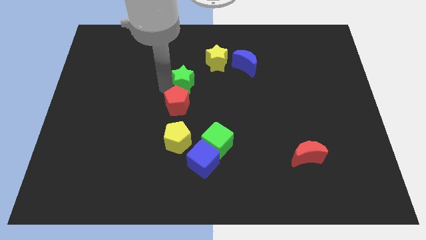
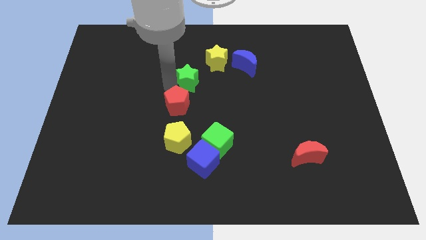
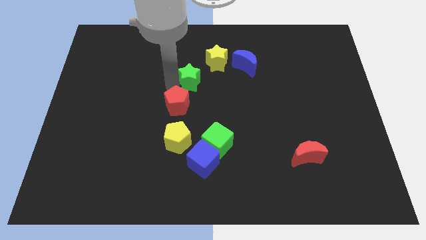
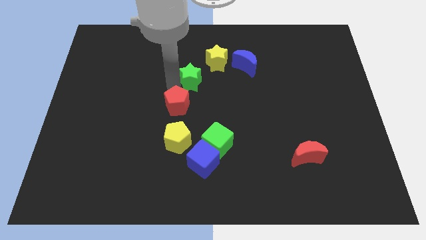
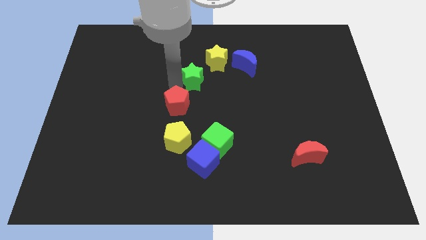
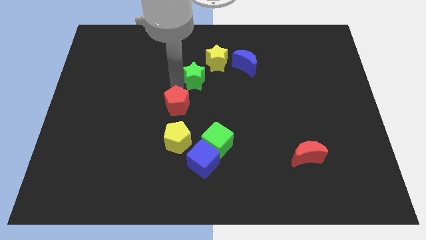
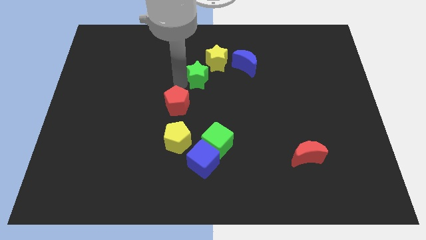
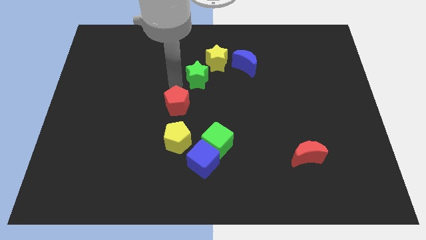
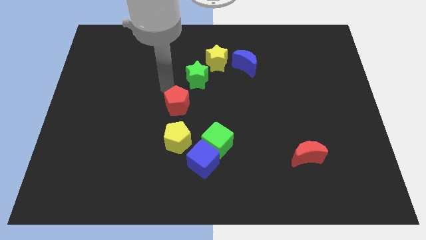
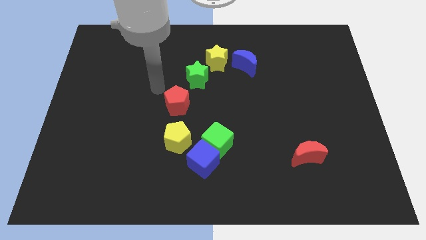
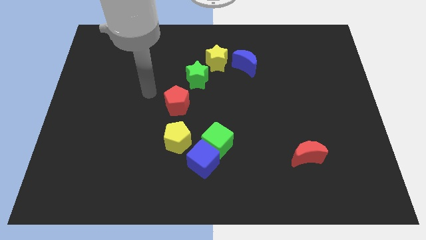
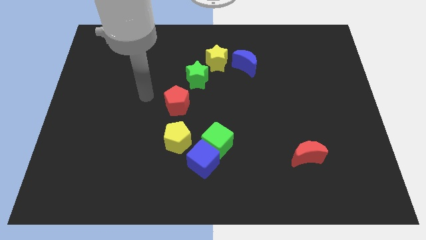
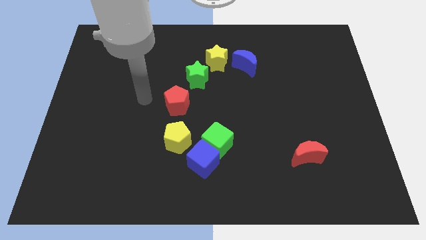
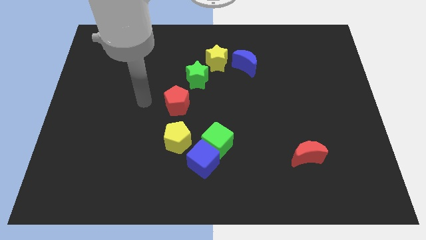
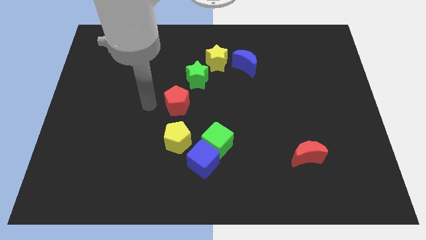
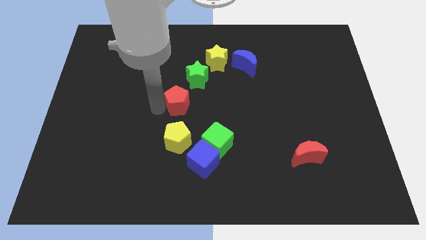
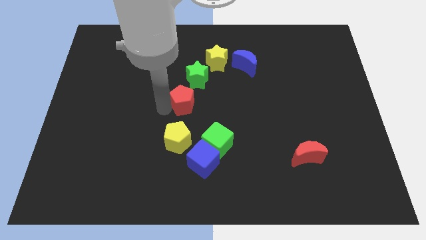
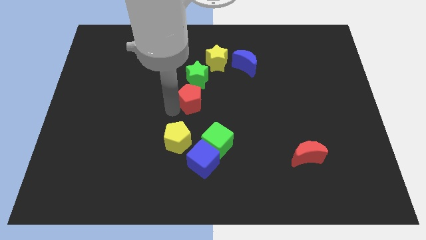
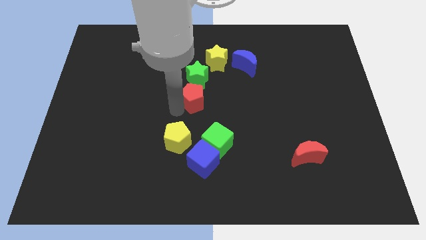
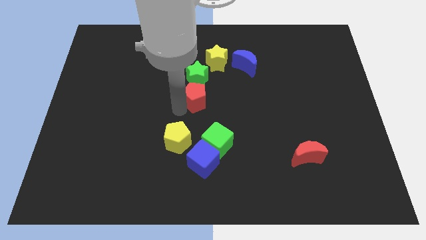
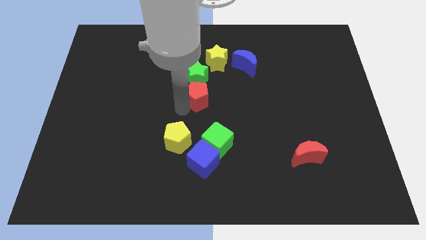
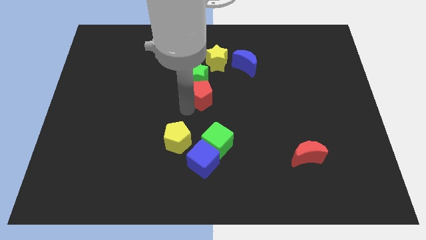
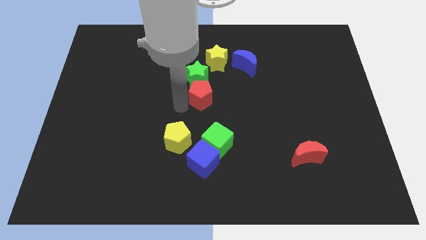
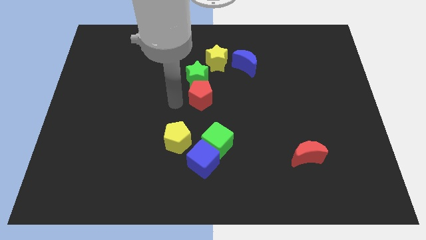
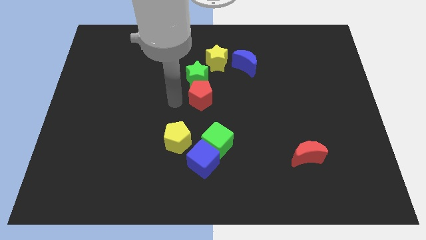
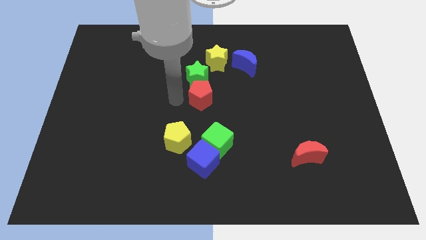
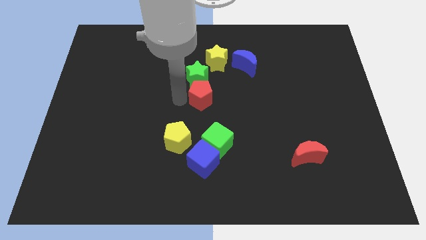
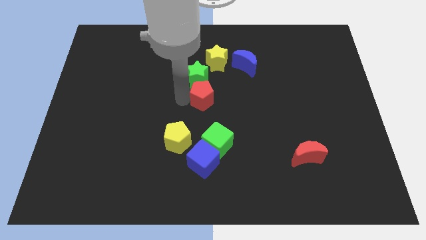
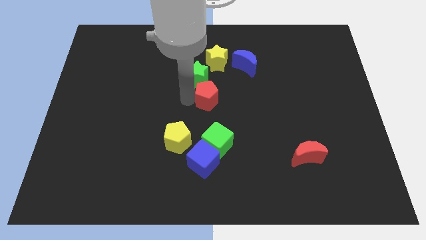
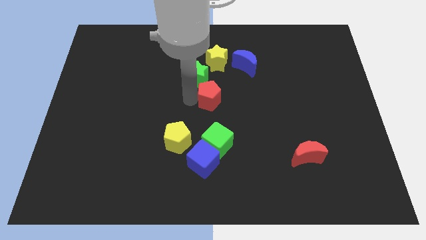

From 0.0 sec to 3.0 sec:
push red pentagon towards right side of the board

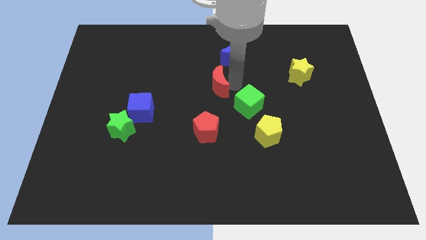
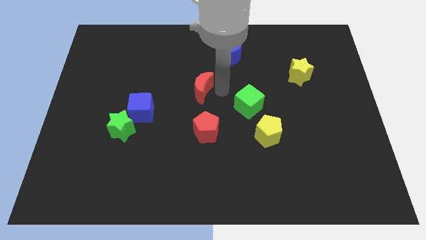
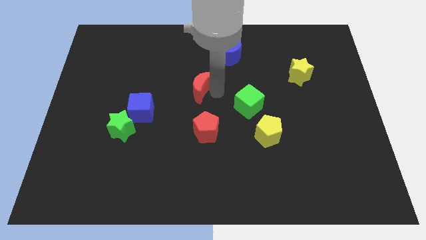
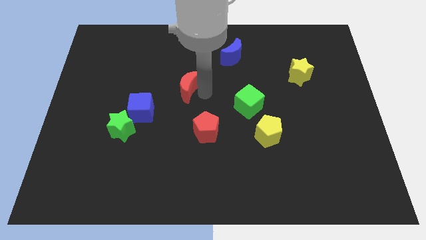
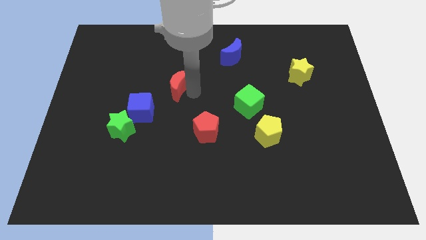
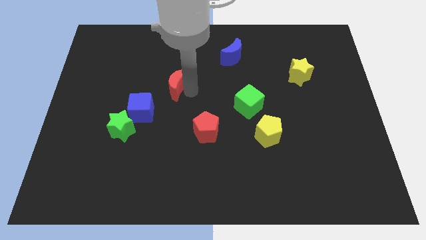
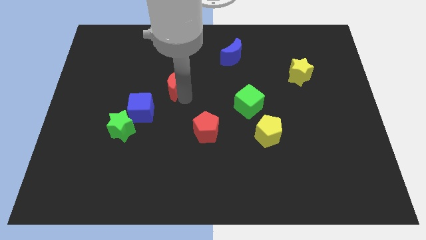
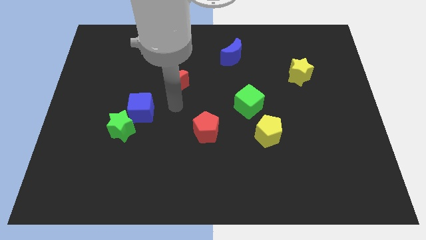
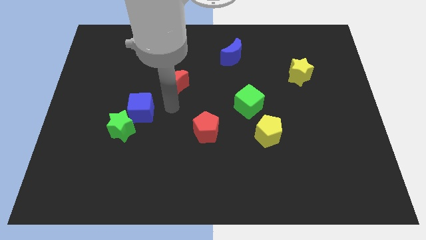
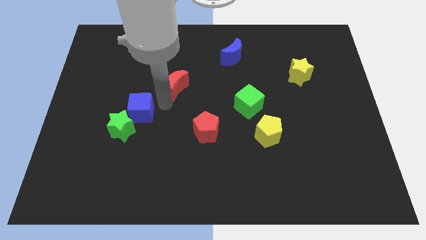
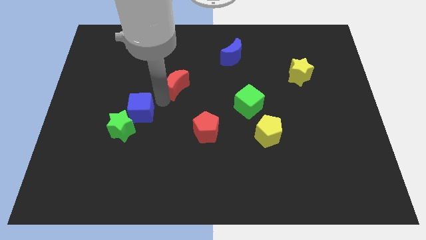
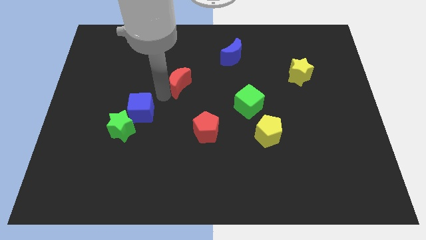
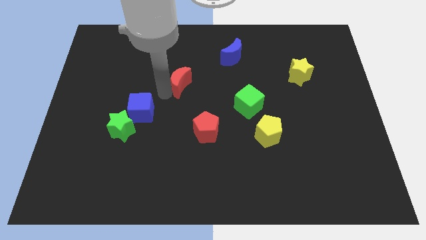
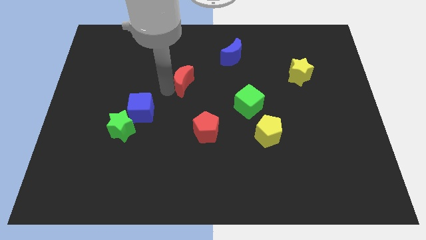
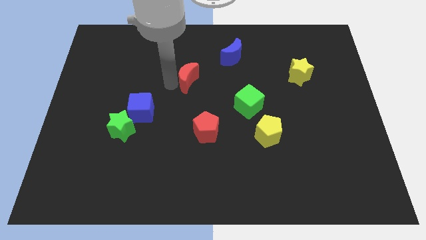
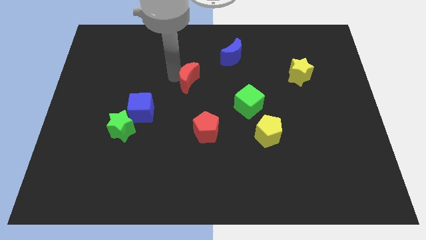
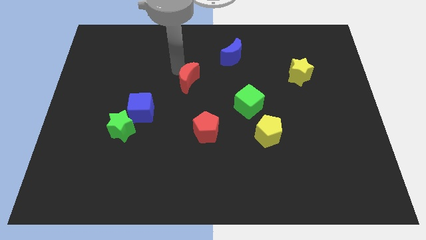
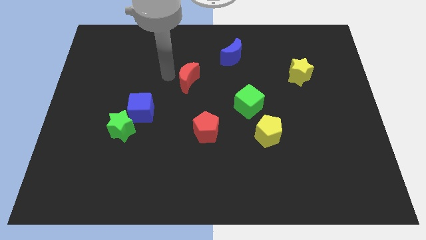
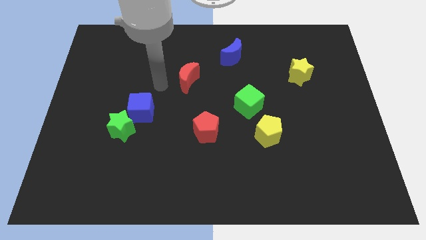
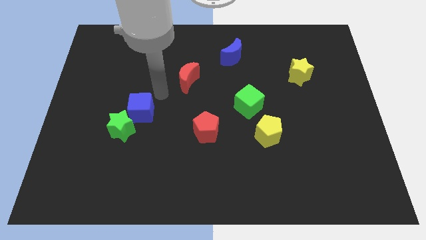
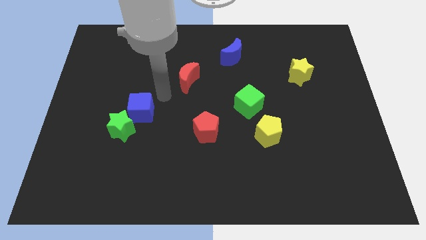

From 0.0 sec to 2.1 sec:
place the red crescent diagonally in between the blue blocks

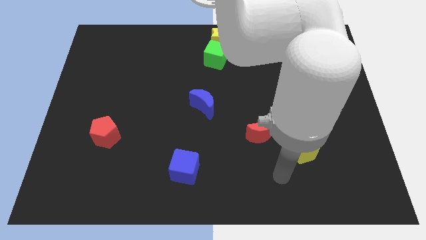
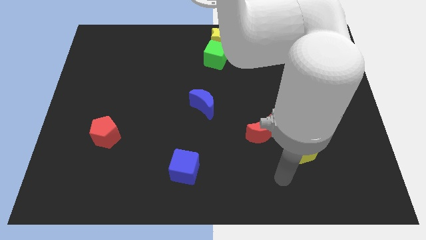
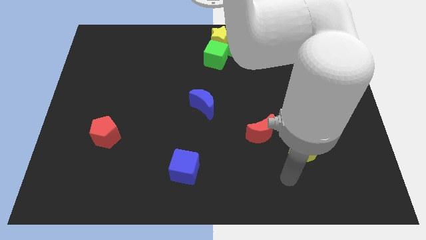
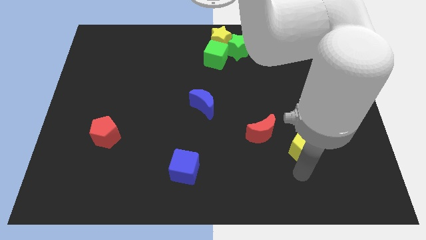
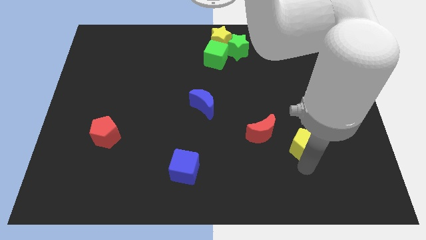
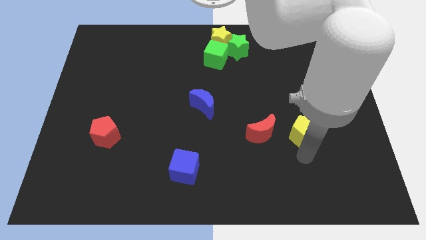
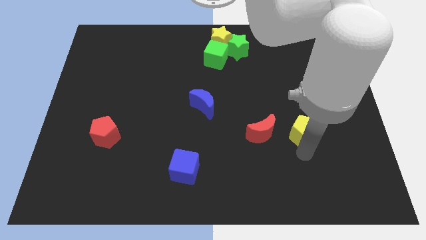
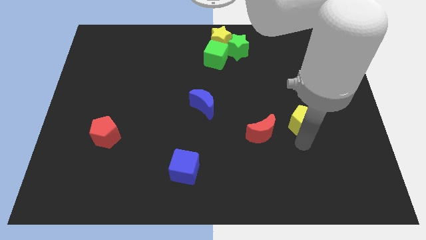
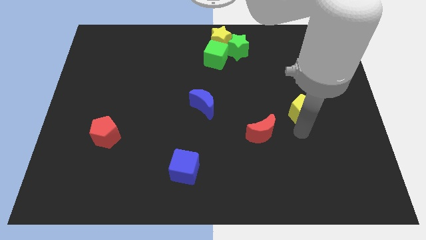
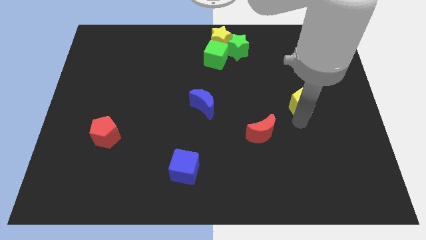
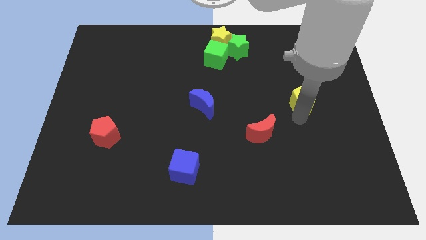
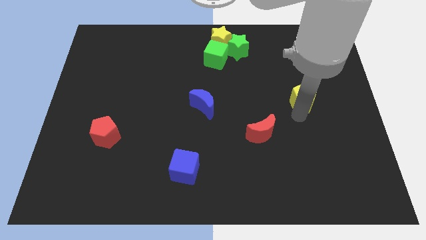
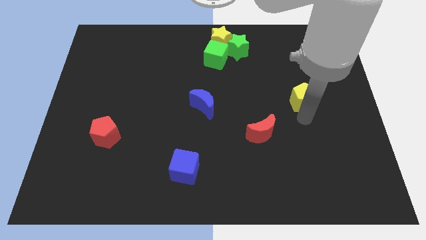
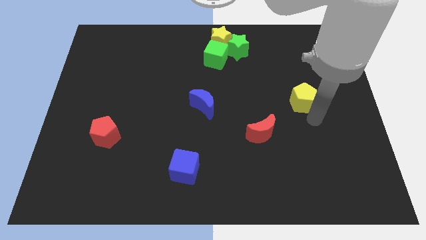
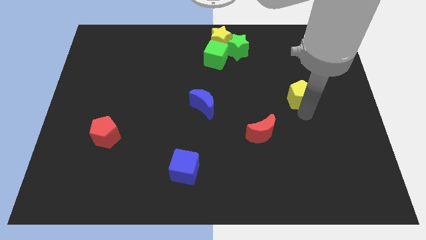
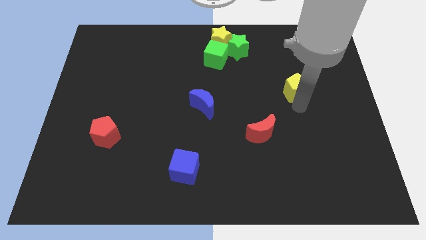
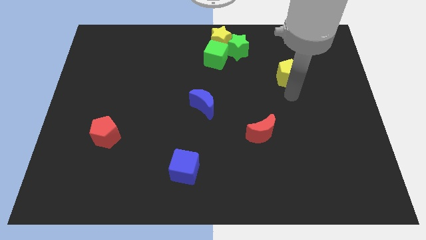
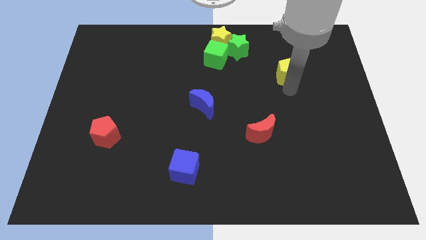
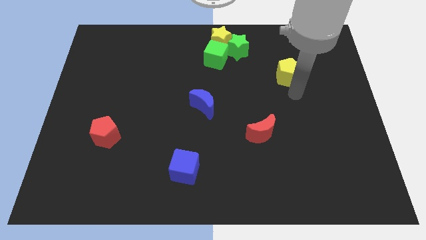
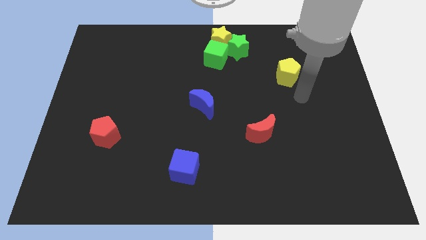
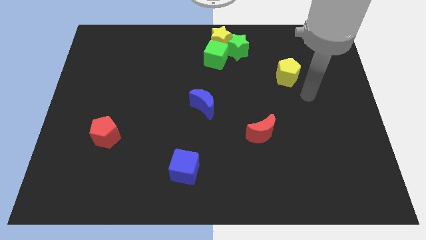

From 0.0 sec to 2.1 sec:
put the yellow pentagon diagonal to the red crescent

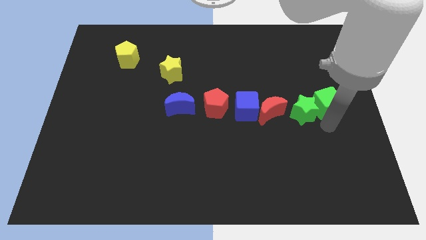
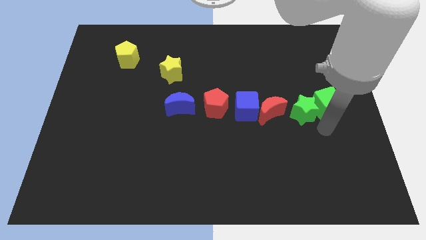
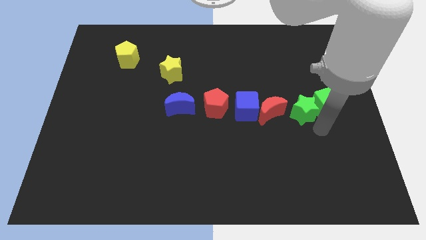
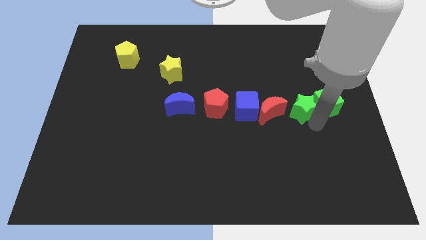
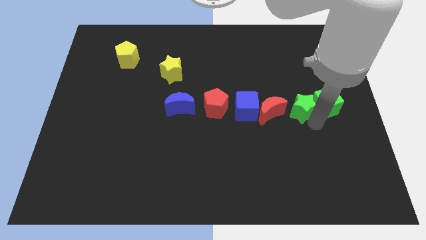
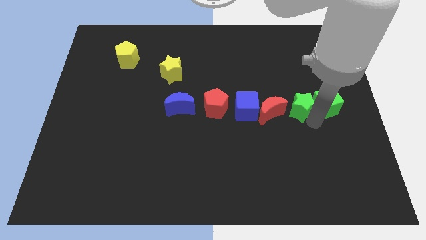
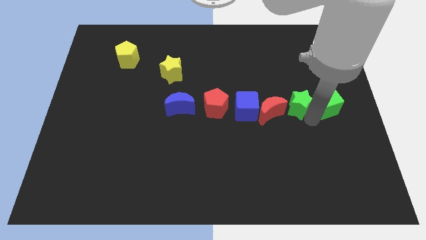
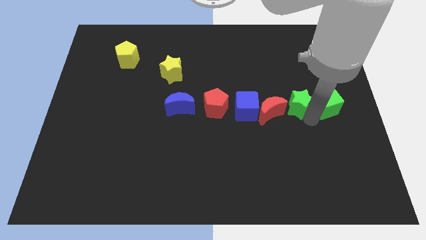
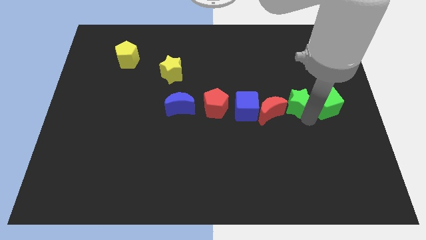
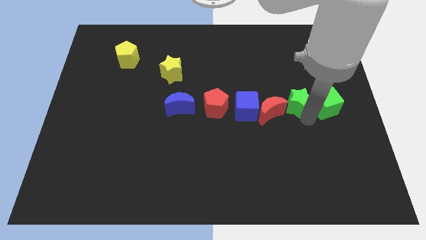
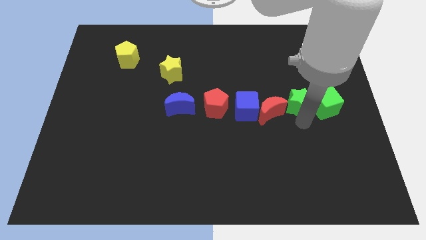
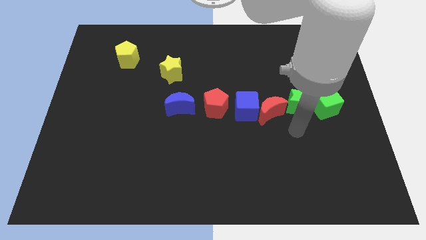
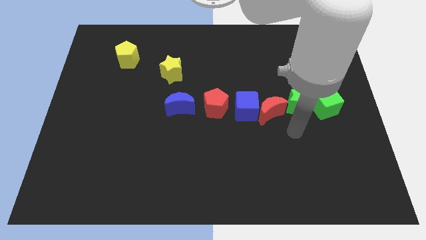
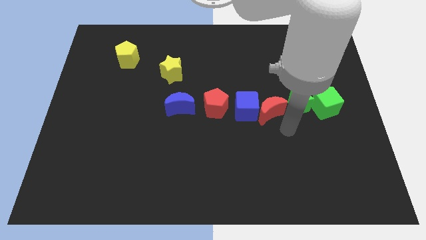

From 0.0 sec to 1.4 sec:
arrange all the blocks in a horizontal line except yellow blocks

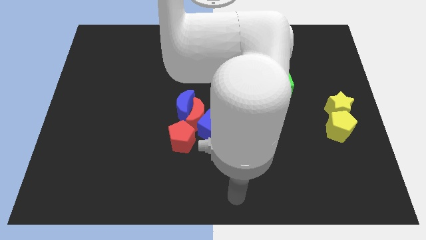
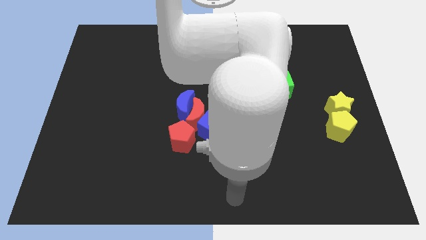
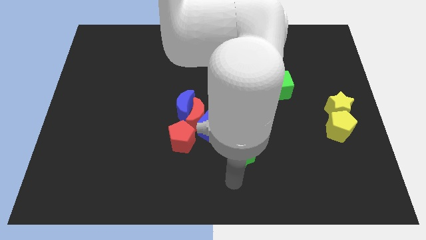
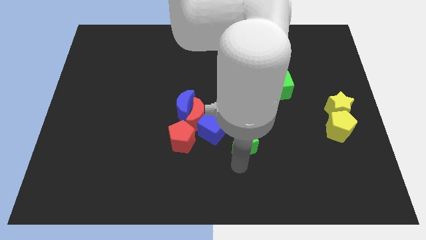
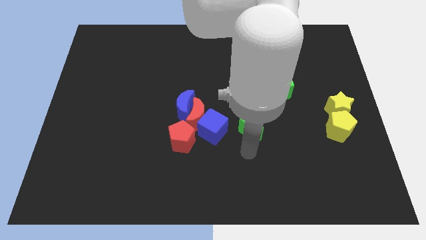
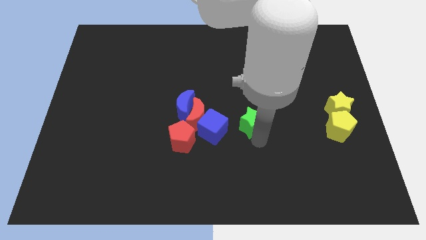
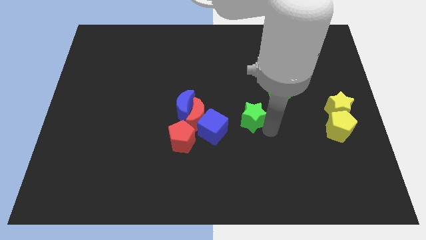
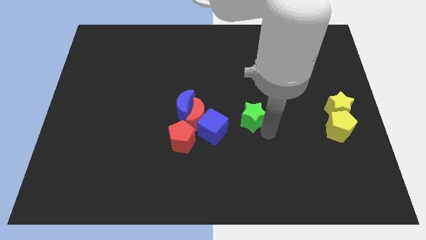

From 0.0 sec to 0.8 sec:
move the green star towards the green cube
